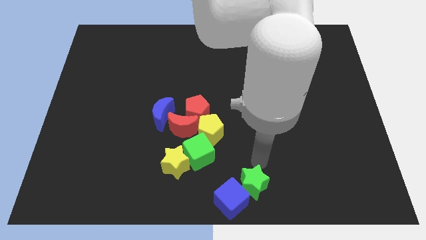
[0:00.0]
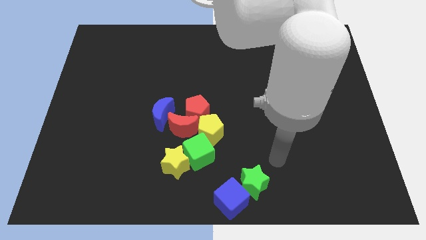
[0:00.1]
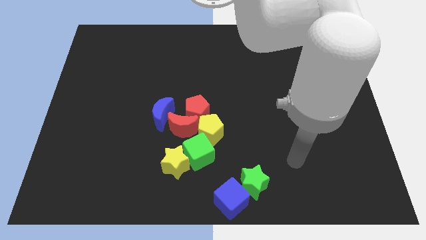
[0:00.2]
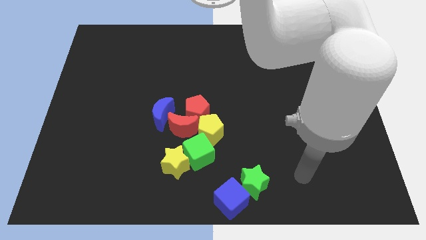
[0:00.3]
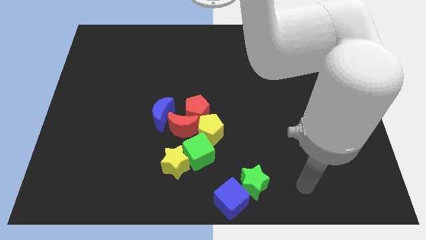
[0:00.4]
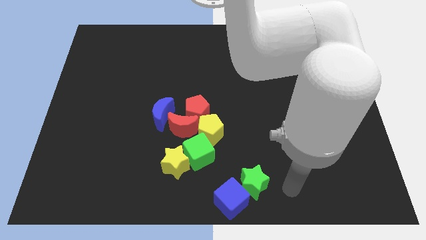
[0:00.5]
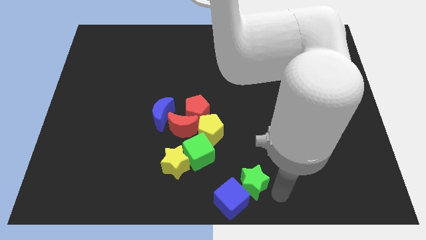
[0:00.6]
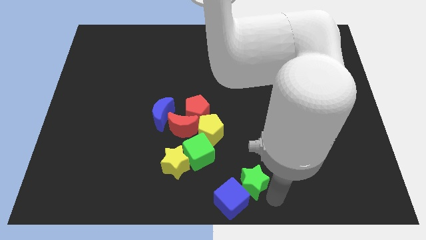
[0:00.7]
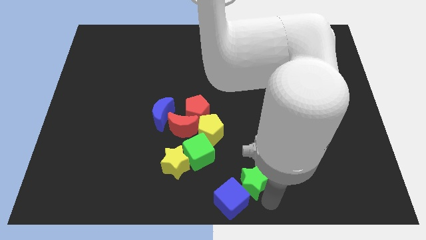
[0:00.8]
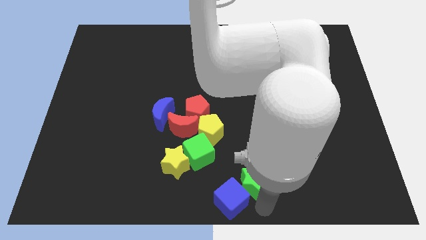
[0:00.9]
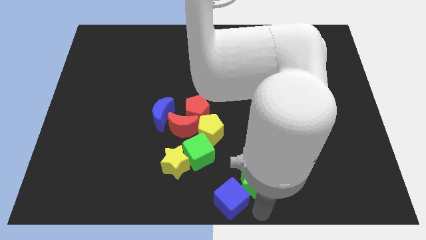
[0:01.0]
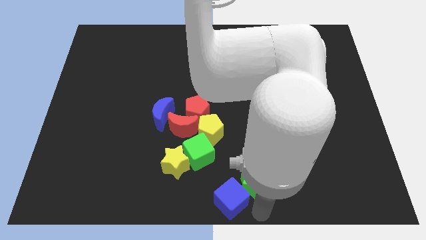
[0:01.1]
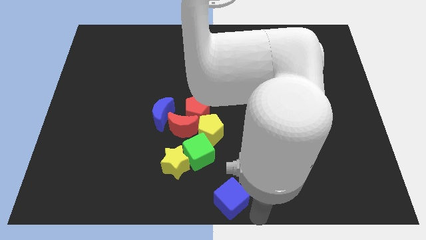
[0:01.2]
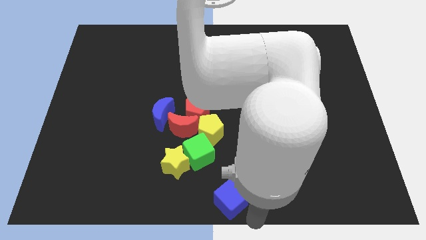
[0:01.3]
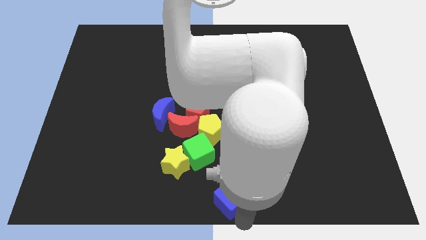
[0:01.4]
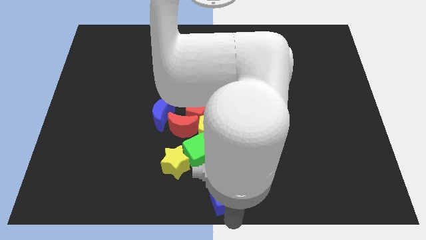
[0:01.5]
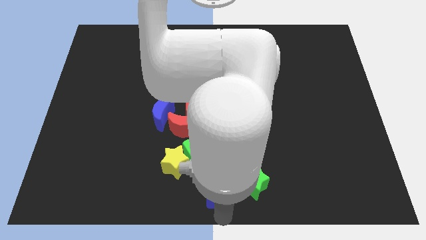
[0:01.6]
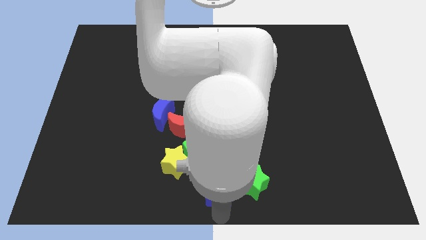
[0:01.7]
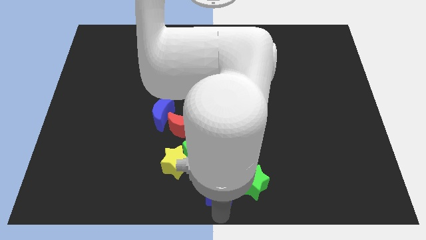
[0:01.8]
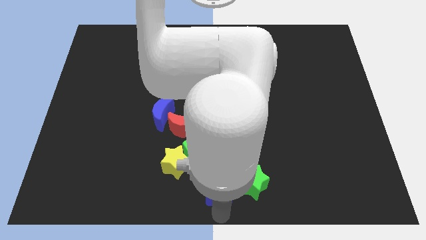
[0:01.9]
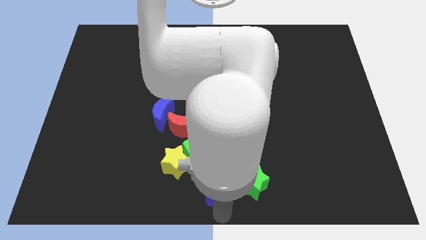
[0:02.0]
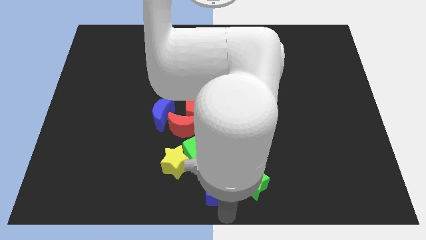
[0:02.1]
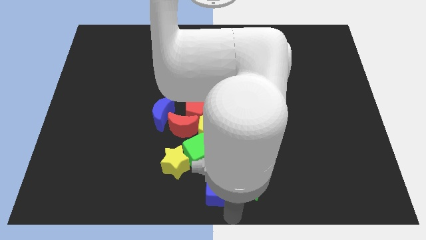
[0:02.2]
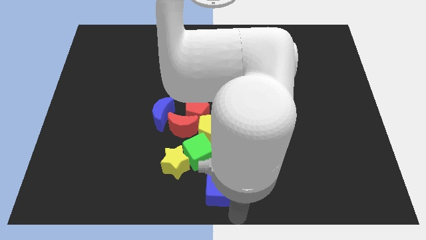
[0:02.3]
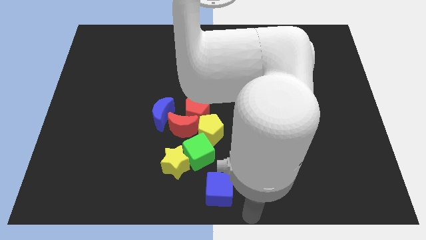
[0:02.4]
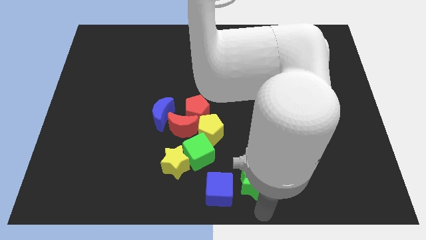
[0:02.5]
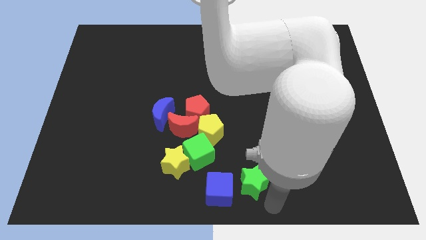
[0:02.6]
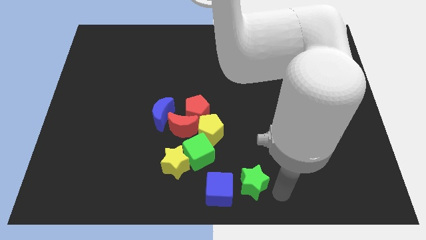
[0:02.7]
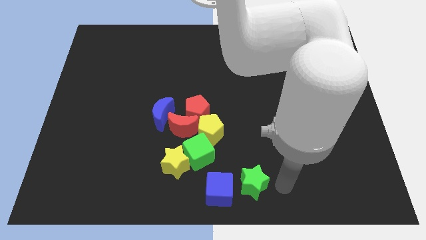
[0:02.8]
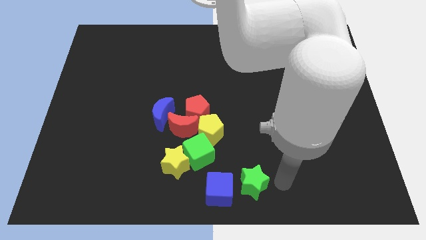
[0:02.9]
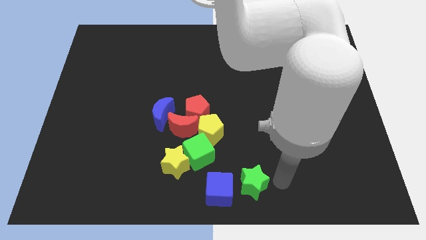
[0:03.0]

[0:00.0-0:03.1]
separate the blue cube from the green star

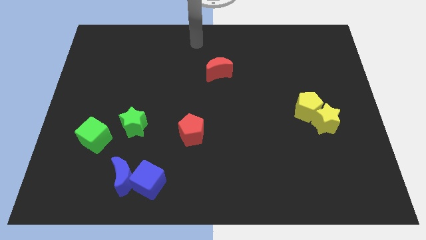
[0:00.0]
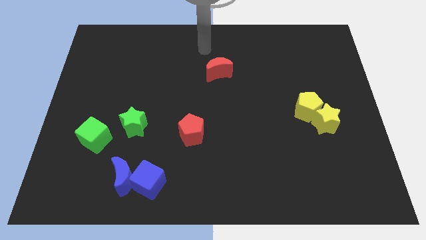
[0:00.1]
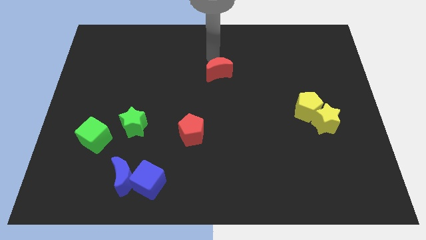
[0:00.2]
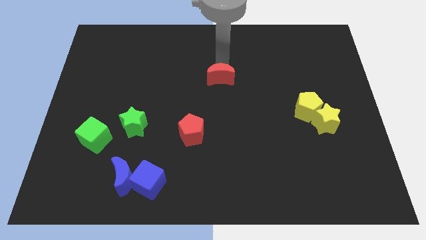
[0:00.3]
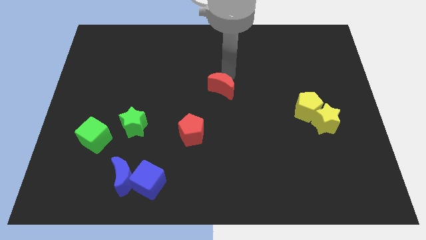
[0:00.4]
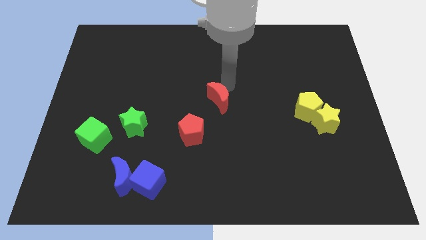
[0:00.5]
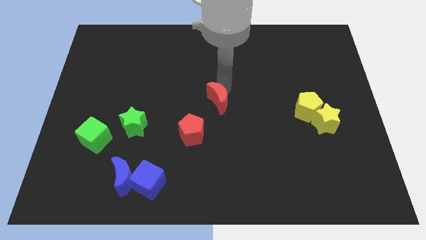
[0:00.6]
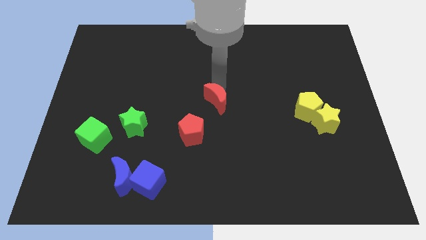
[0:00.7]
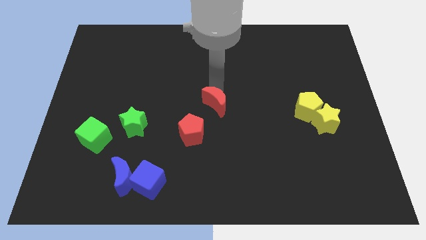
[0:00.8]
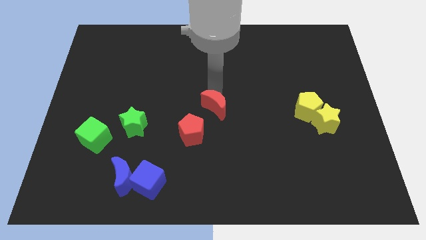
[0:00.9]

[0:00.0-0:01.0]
move the red crescent to the top right of the red pentagon

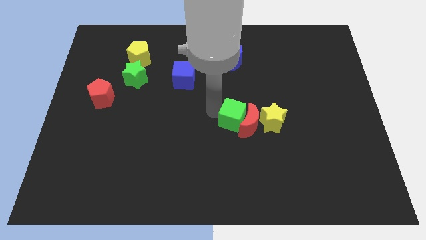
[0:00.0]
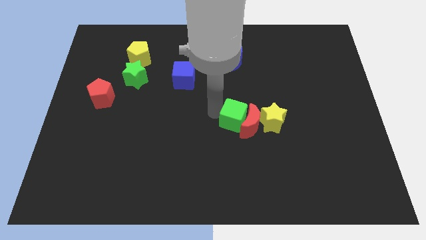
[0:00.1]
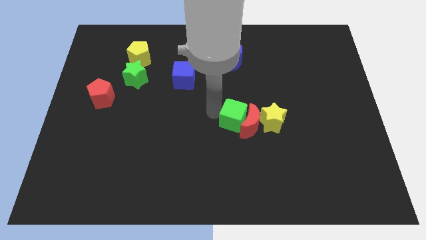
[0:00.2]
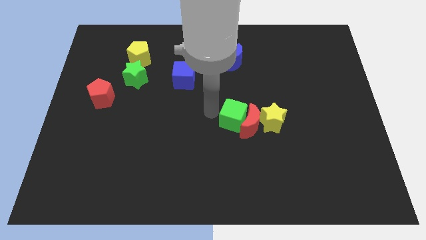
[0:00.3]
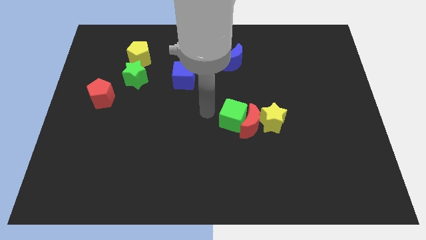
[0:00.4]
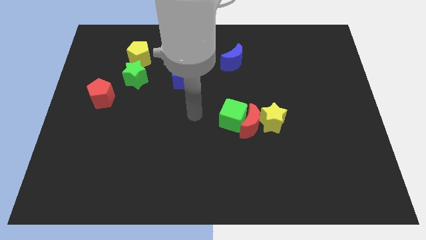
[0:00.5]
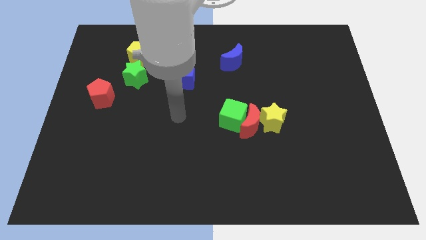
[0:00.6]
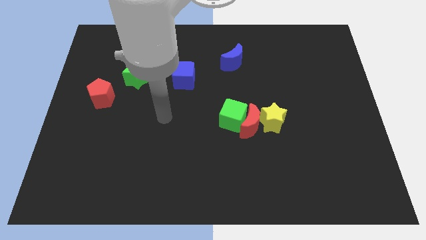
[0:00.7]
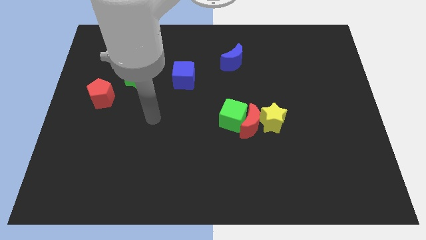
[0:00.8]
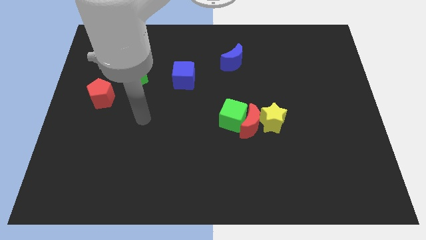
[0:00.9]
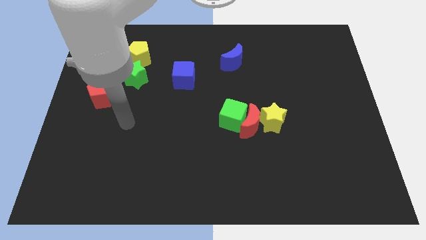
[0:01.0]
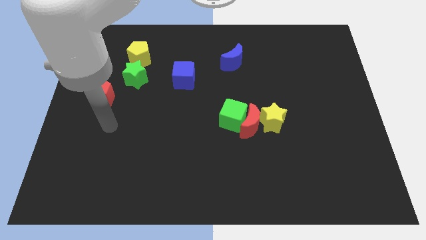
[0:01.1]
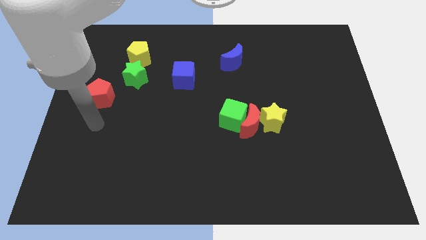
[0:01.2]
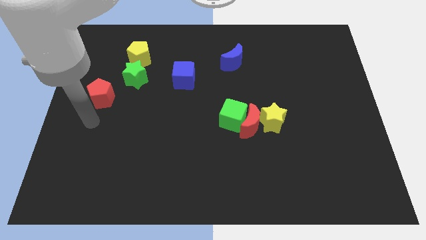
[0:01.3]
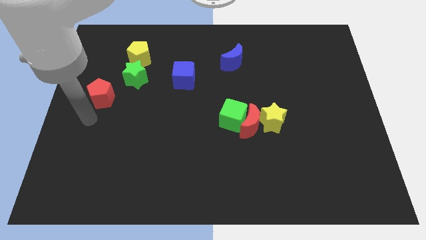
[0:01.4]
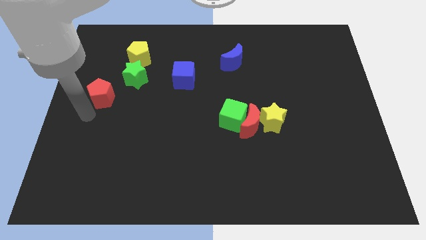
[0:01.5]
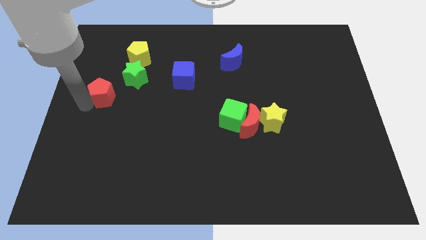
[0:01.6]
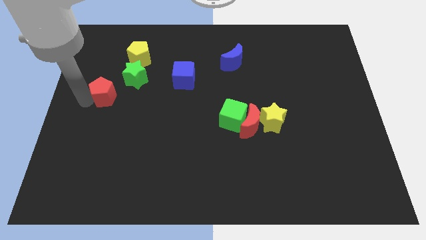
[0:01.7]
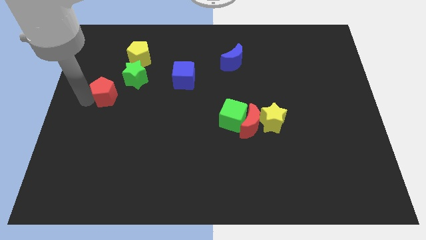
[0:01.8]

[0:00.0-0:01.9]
push the arm at the bottom left side of the red pentagon

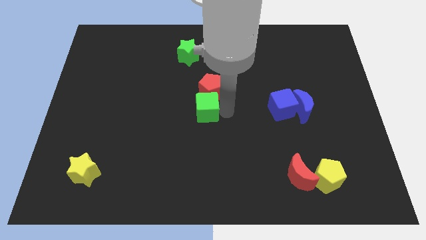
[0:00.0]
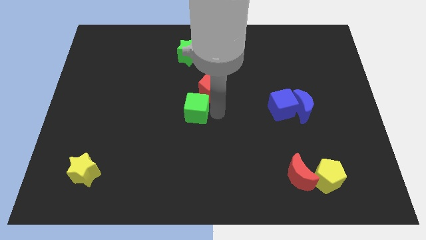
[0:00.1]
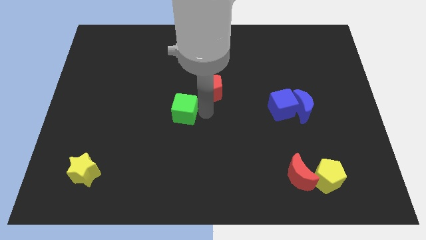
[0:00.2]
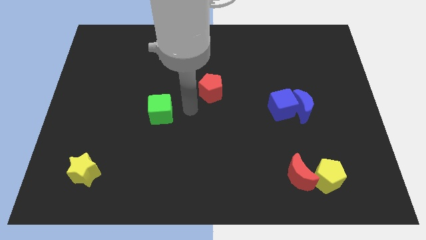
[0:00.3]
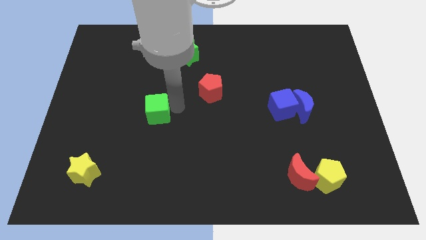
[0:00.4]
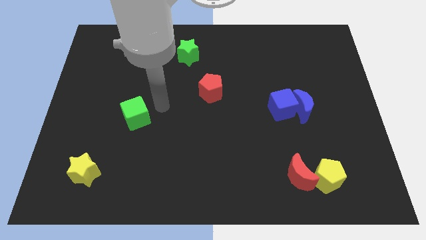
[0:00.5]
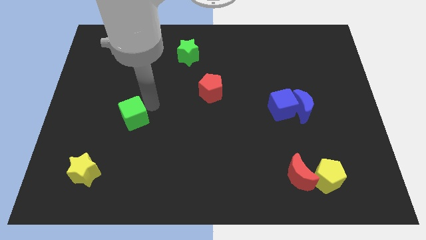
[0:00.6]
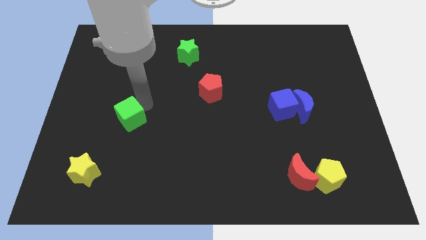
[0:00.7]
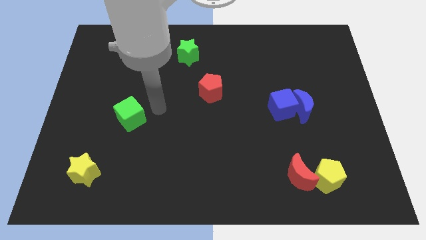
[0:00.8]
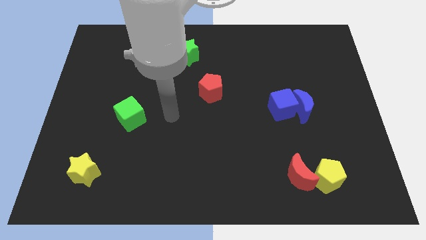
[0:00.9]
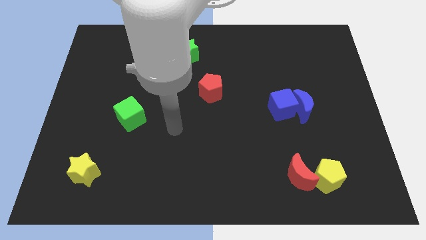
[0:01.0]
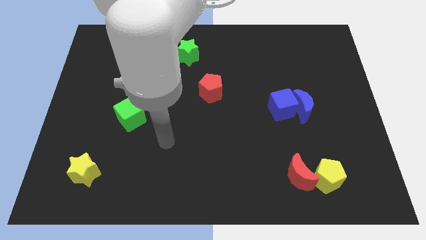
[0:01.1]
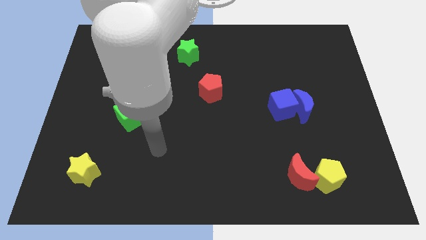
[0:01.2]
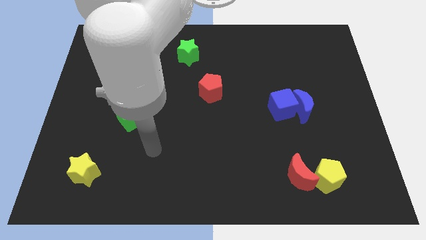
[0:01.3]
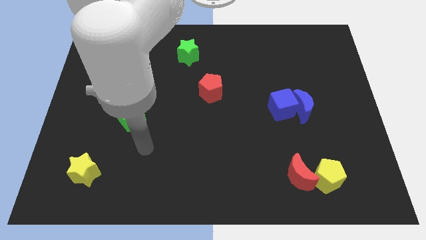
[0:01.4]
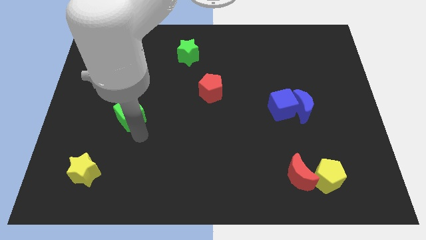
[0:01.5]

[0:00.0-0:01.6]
separate the green cube from the bottom side of the red pentagon

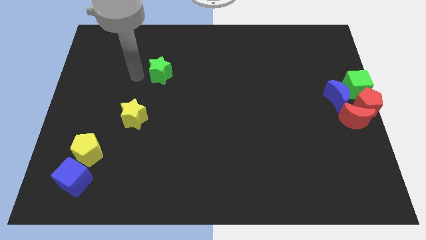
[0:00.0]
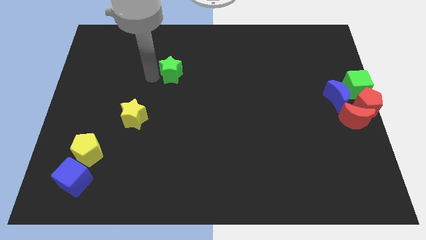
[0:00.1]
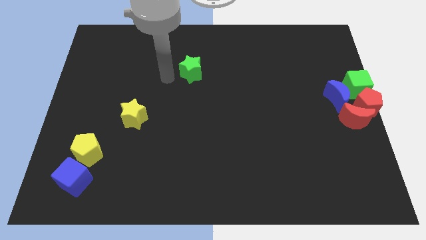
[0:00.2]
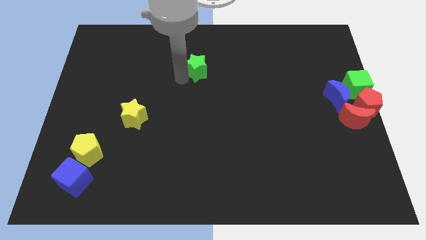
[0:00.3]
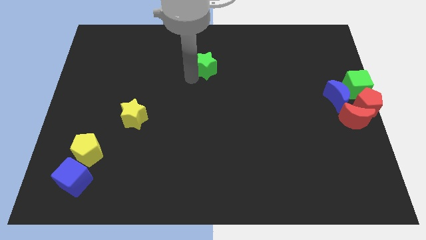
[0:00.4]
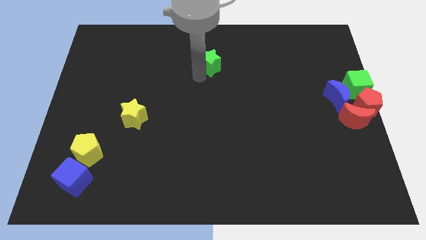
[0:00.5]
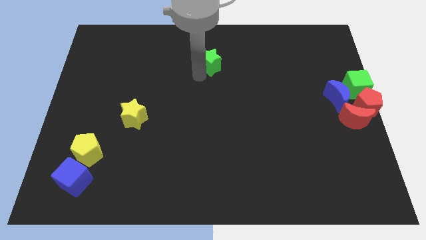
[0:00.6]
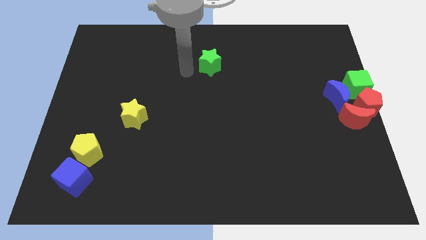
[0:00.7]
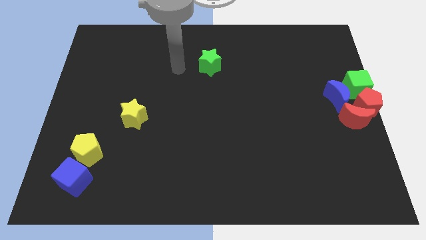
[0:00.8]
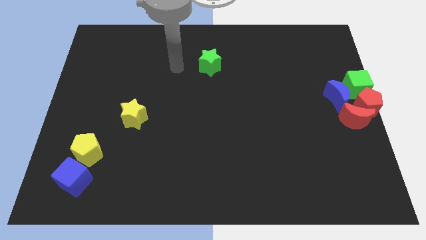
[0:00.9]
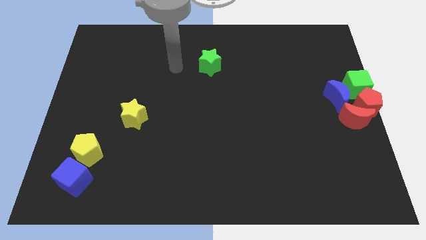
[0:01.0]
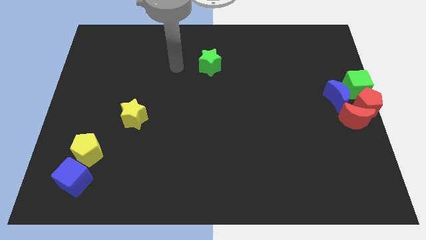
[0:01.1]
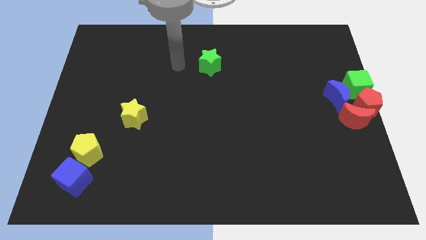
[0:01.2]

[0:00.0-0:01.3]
place the green star diagonally to the right of the yellow star

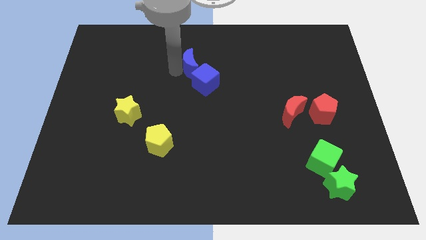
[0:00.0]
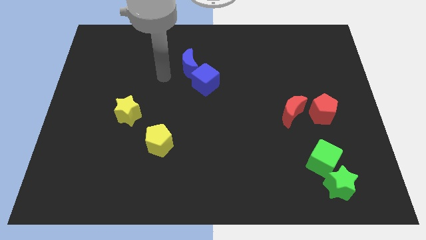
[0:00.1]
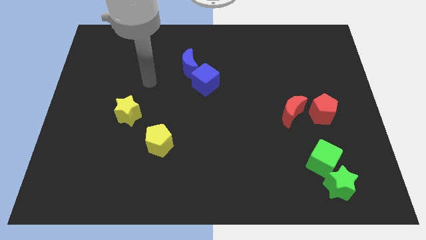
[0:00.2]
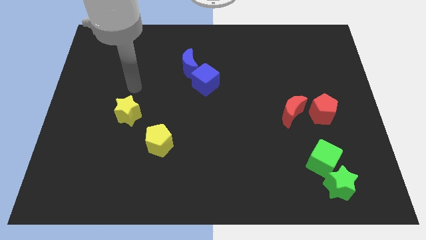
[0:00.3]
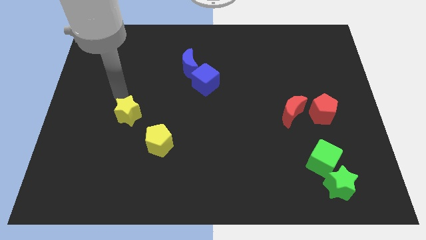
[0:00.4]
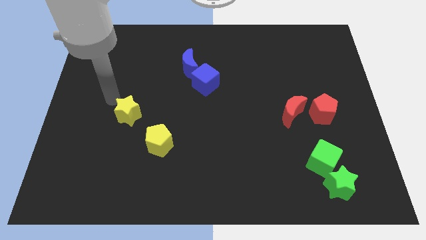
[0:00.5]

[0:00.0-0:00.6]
place the arm close to the yellow star
